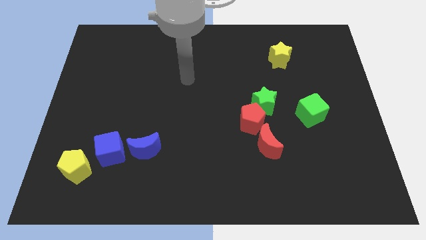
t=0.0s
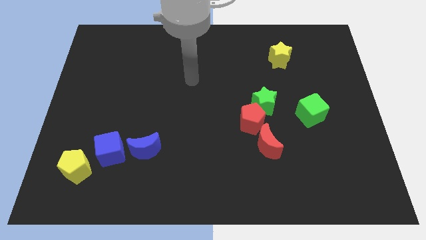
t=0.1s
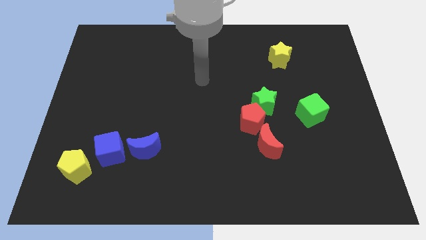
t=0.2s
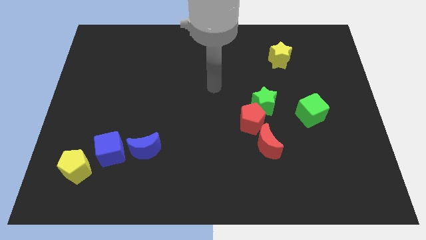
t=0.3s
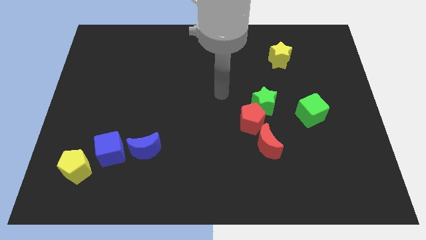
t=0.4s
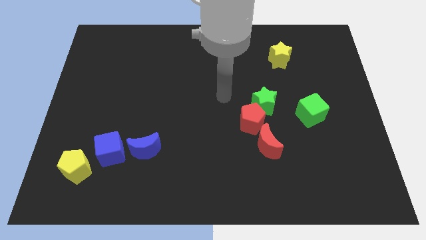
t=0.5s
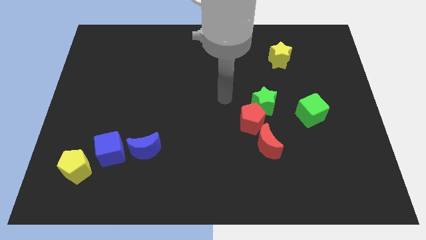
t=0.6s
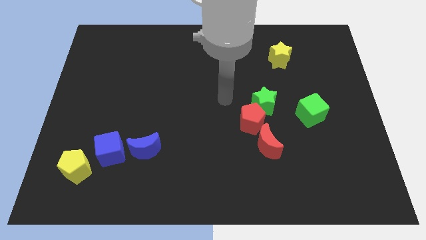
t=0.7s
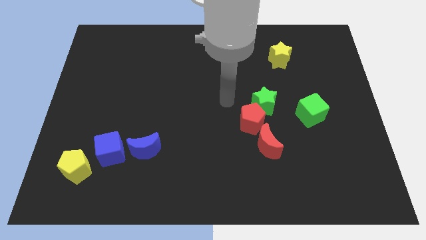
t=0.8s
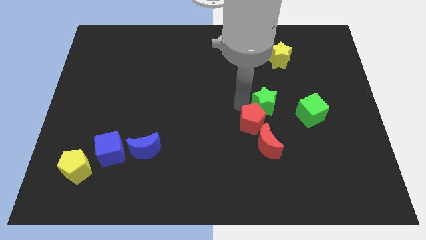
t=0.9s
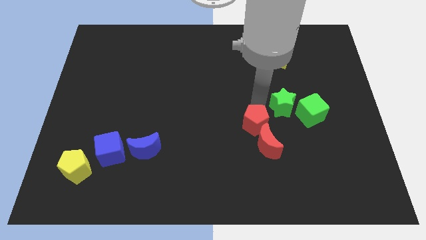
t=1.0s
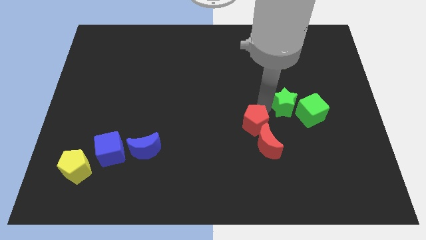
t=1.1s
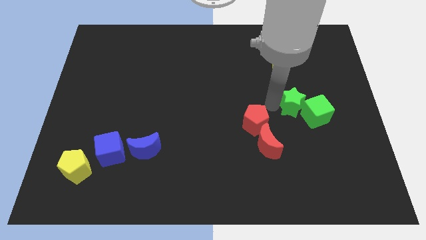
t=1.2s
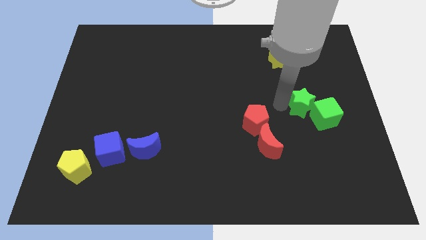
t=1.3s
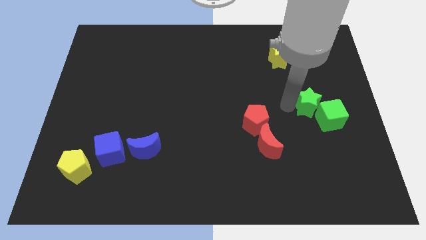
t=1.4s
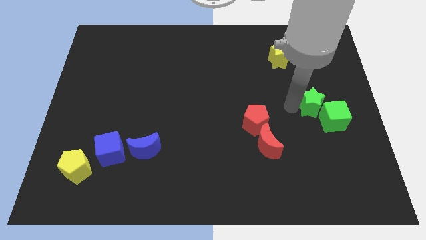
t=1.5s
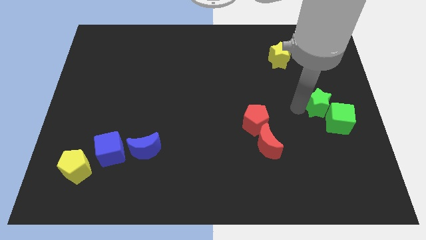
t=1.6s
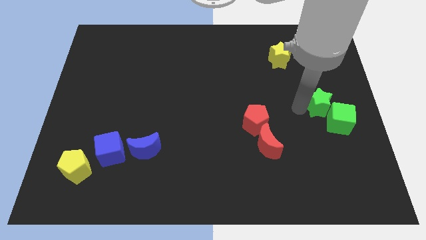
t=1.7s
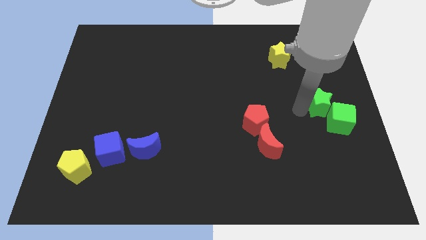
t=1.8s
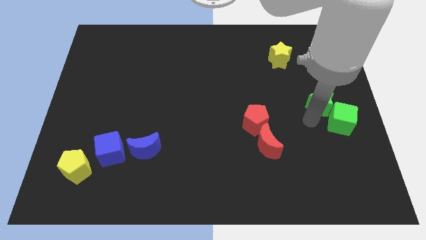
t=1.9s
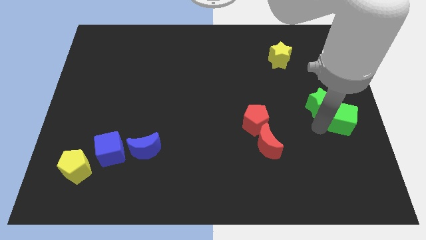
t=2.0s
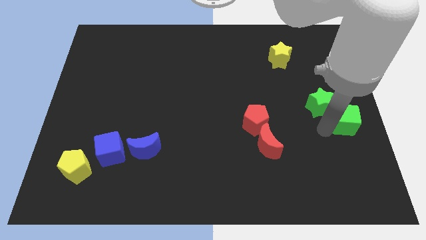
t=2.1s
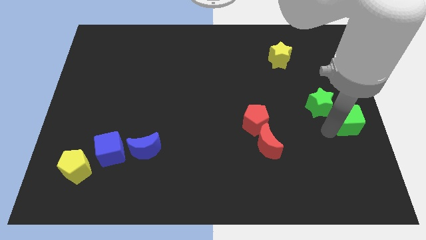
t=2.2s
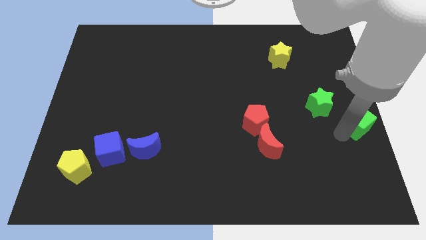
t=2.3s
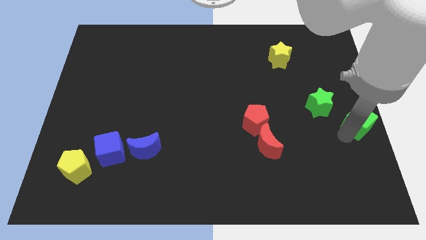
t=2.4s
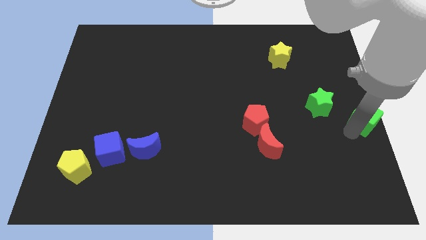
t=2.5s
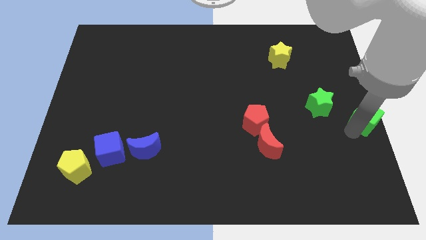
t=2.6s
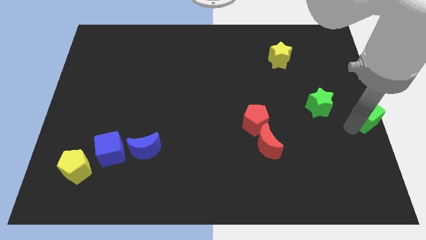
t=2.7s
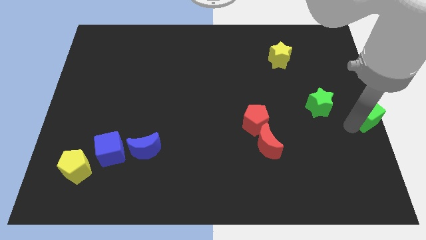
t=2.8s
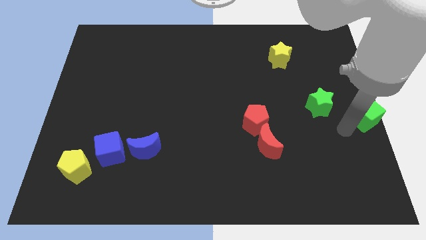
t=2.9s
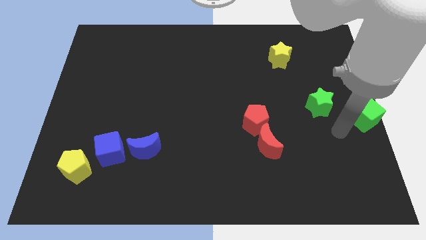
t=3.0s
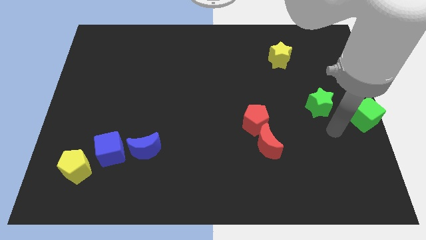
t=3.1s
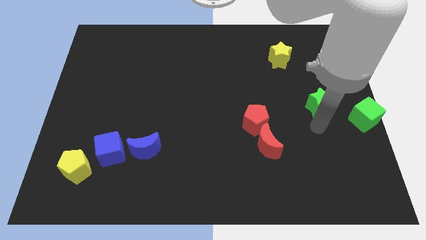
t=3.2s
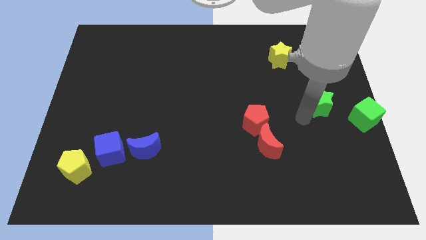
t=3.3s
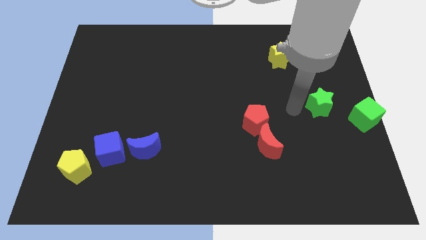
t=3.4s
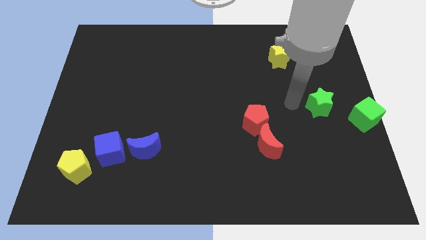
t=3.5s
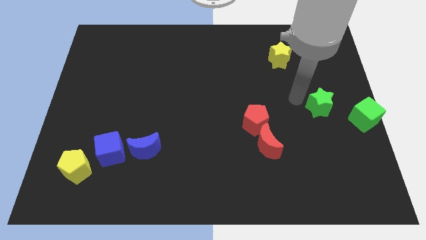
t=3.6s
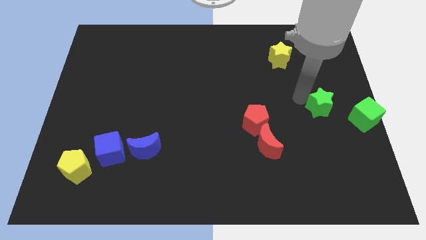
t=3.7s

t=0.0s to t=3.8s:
place the arm left to the green star

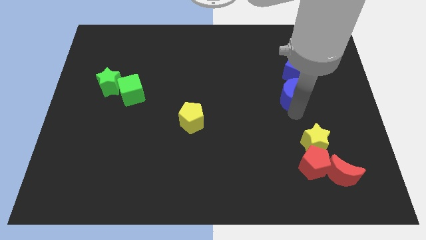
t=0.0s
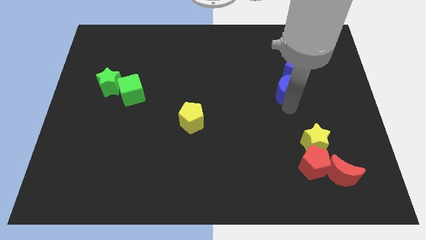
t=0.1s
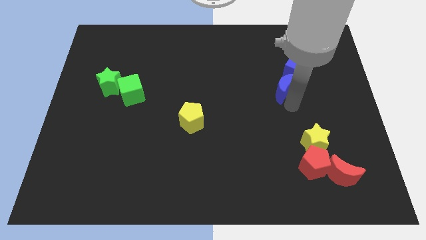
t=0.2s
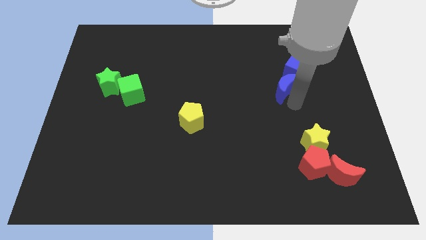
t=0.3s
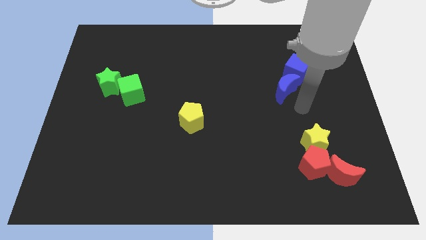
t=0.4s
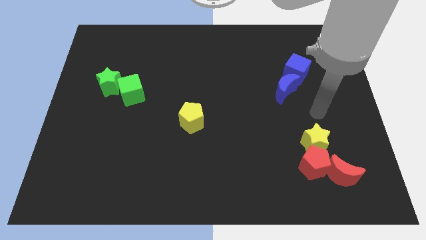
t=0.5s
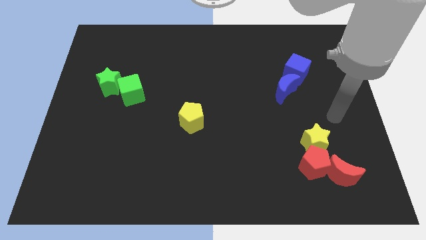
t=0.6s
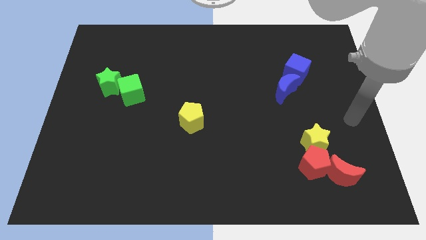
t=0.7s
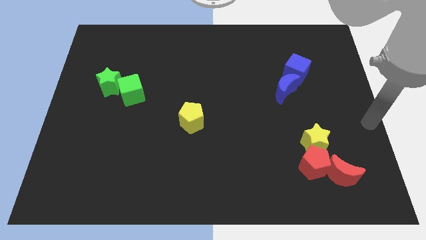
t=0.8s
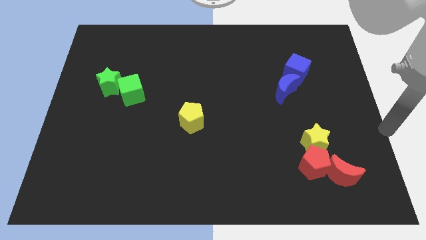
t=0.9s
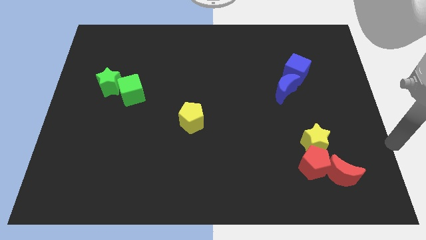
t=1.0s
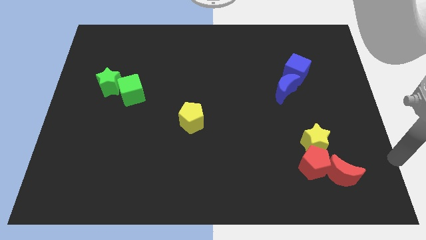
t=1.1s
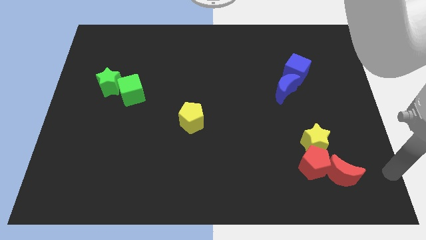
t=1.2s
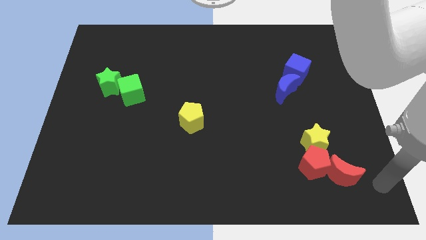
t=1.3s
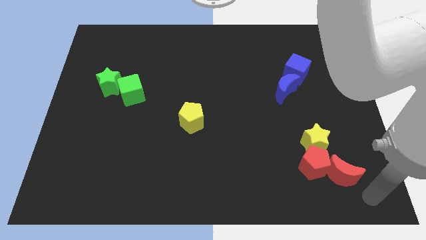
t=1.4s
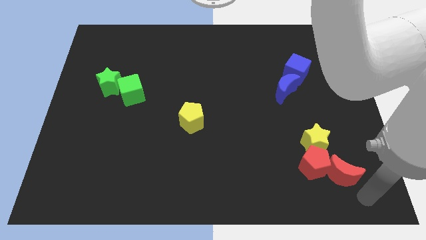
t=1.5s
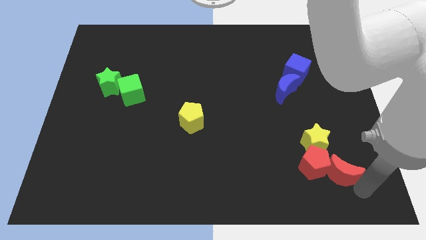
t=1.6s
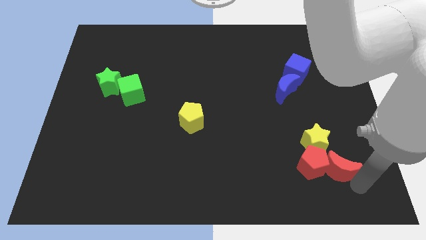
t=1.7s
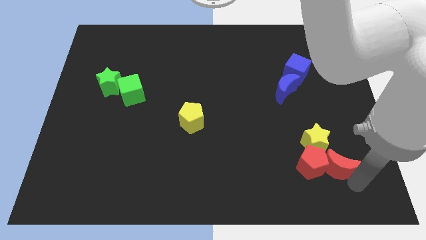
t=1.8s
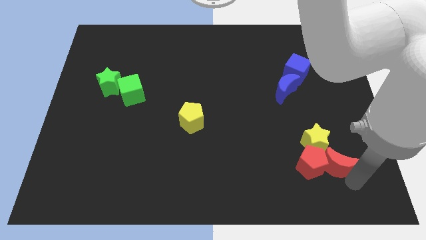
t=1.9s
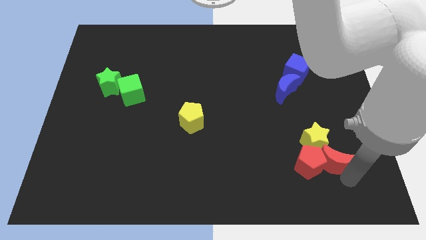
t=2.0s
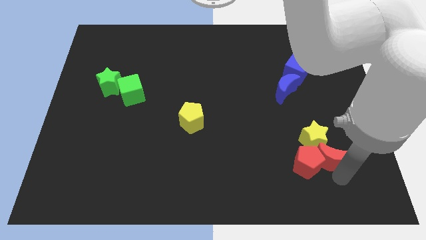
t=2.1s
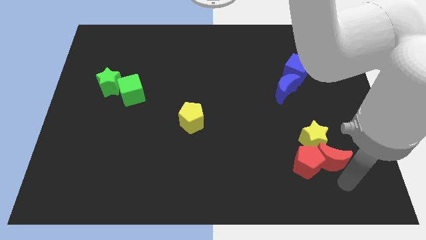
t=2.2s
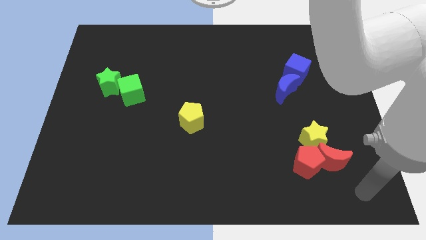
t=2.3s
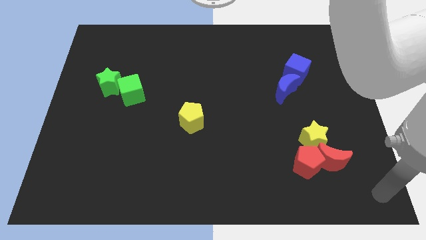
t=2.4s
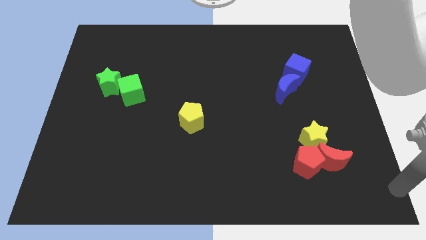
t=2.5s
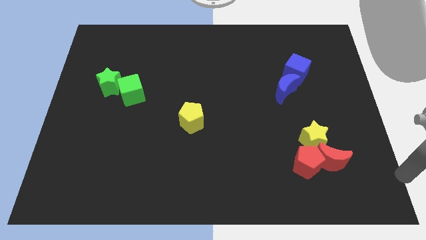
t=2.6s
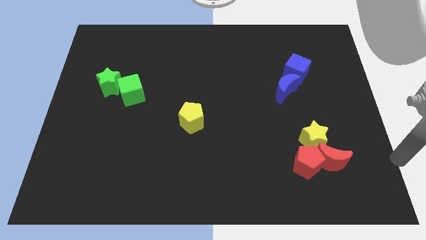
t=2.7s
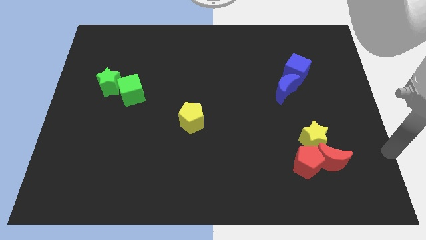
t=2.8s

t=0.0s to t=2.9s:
slightly push red moon towards its top

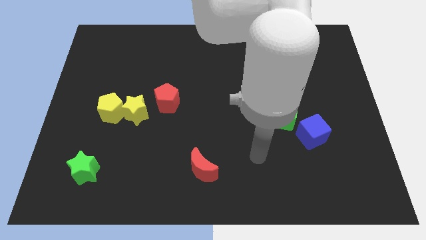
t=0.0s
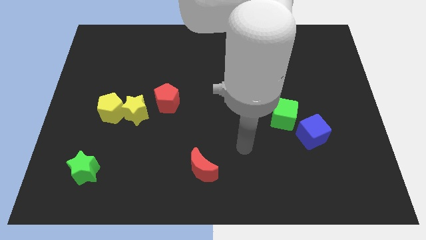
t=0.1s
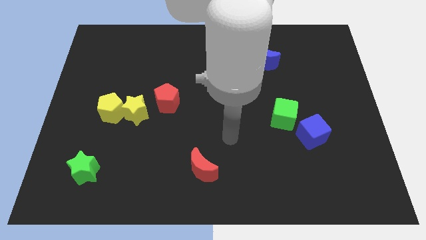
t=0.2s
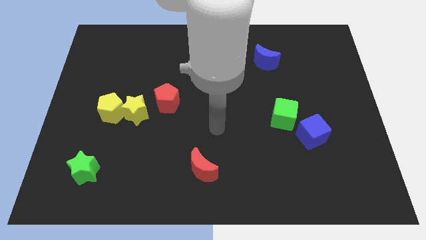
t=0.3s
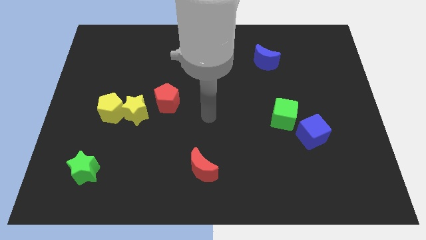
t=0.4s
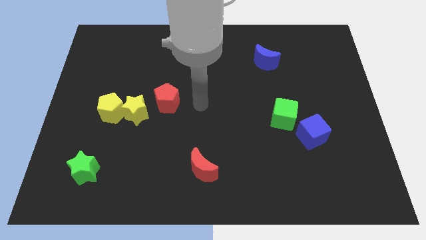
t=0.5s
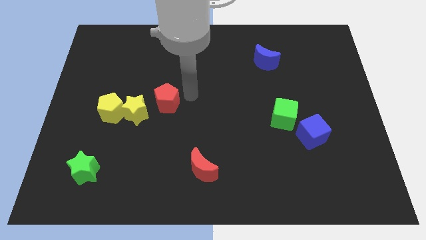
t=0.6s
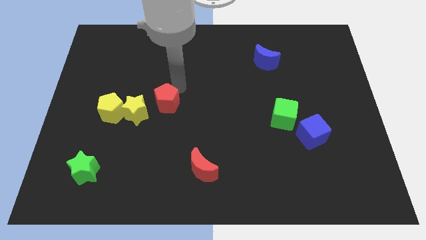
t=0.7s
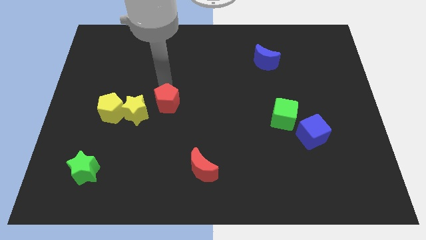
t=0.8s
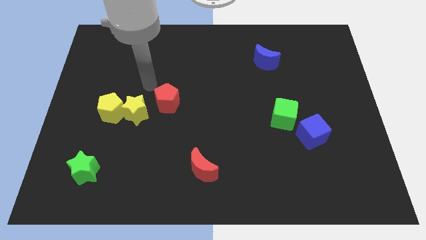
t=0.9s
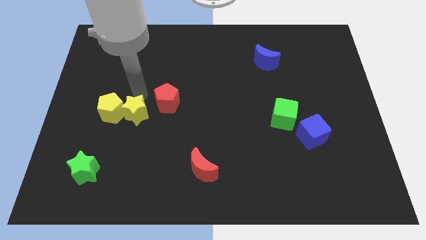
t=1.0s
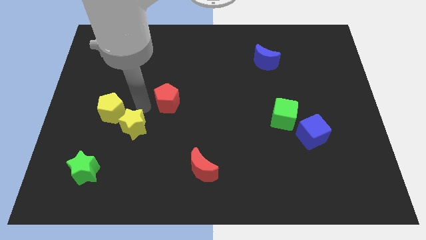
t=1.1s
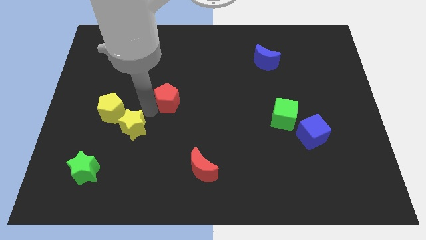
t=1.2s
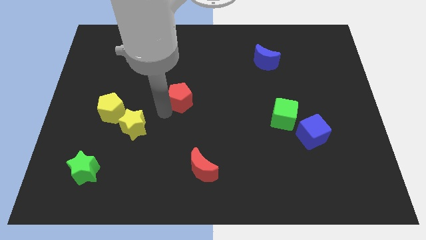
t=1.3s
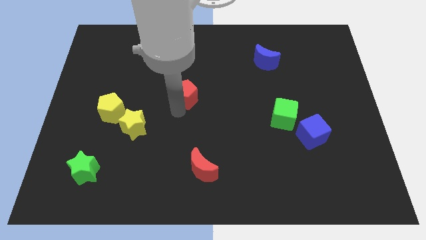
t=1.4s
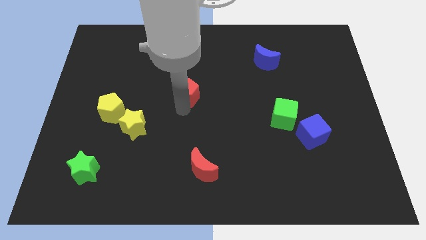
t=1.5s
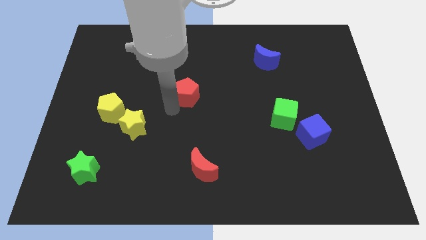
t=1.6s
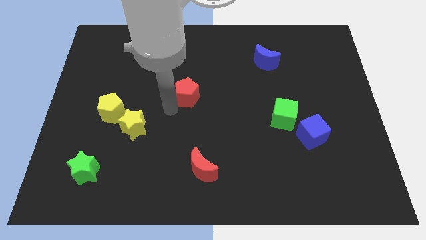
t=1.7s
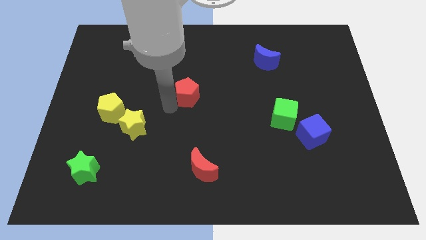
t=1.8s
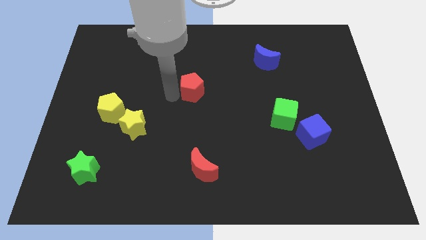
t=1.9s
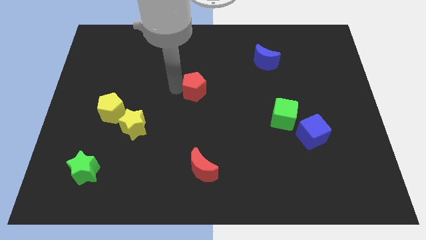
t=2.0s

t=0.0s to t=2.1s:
move the red pentagon towards center

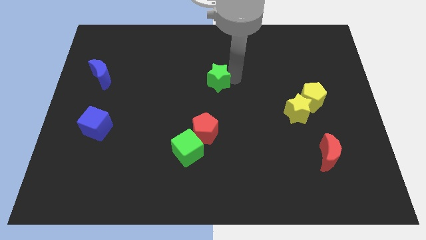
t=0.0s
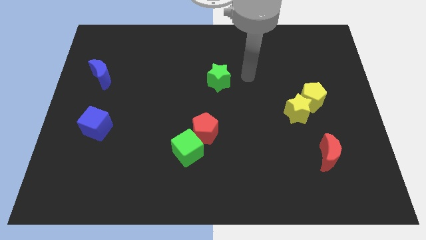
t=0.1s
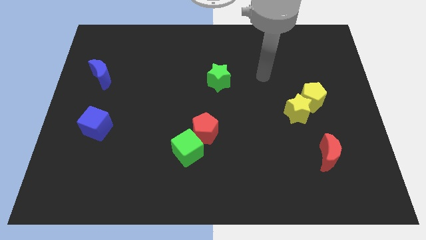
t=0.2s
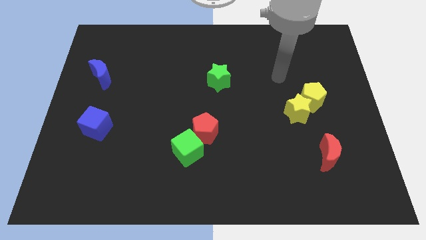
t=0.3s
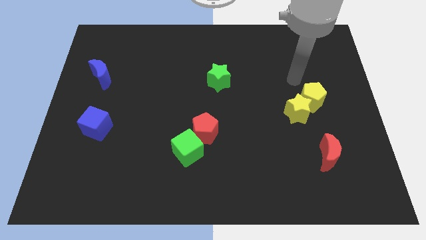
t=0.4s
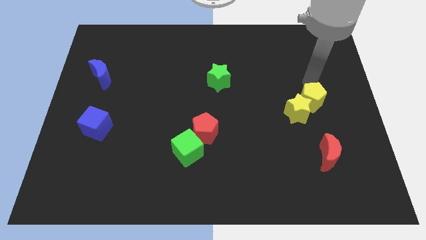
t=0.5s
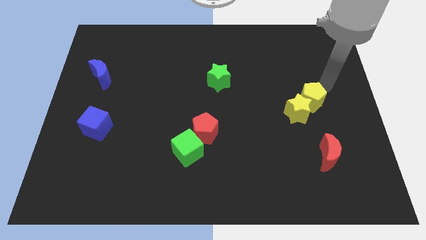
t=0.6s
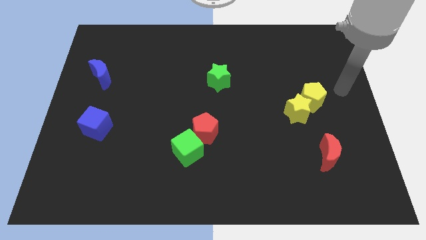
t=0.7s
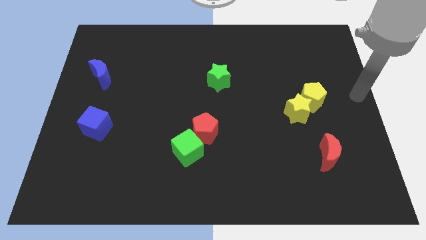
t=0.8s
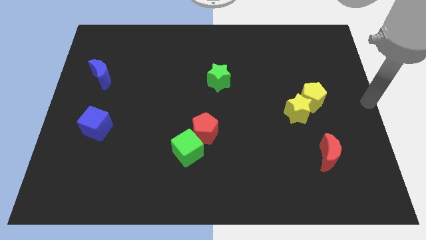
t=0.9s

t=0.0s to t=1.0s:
point your arm to the center right side of the board
